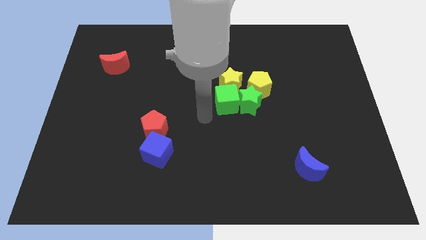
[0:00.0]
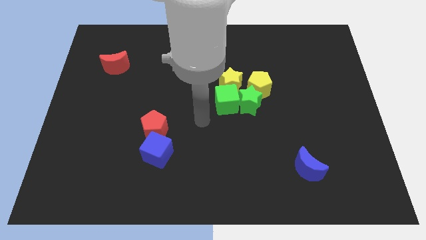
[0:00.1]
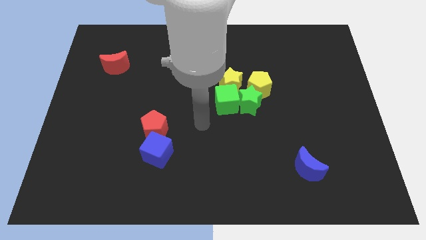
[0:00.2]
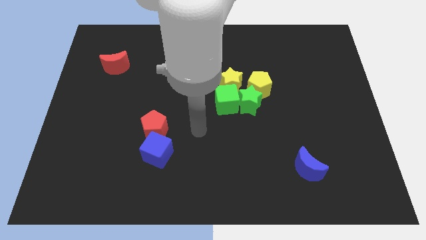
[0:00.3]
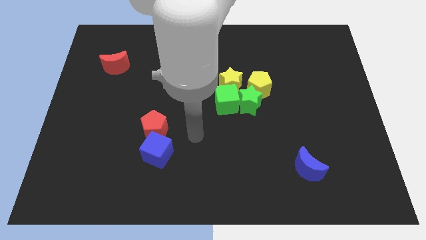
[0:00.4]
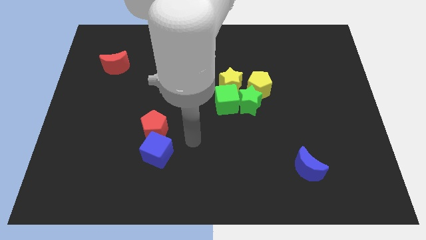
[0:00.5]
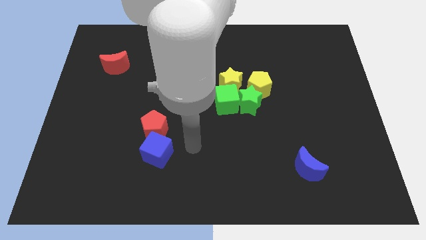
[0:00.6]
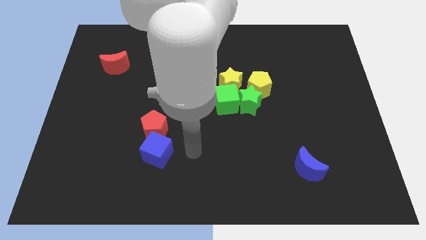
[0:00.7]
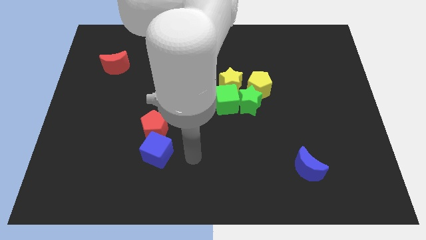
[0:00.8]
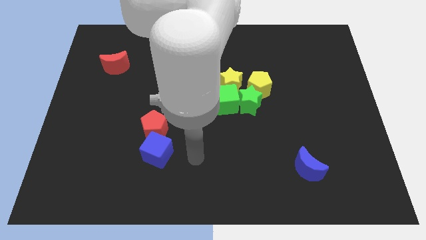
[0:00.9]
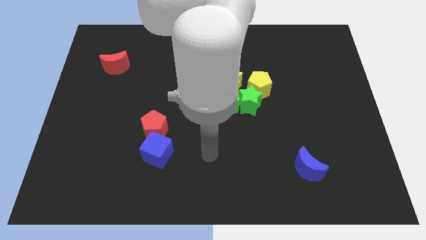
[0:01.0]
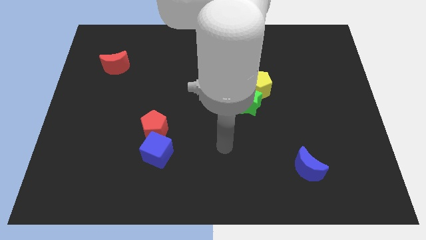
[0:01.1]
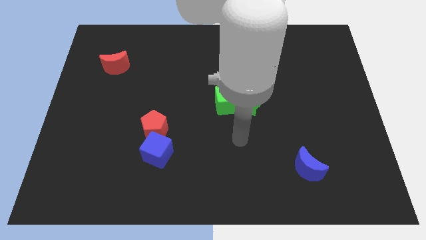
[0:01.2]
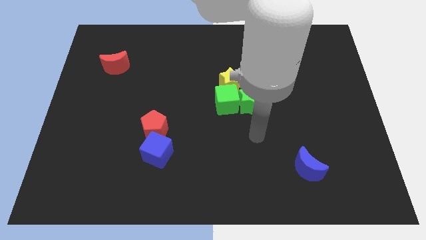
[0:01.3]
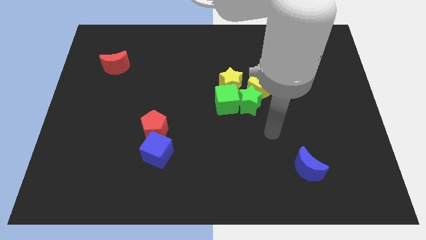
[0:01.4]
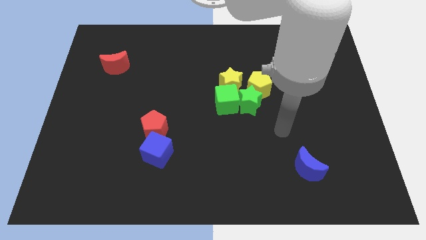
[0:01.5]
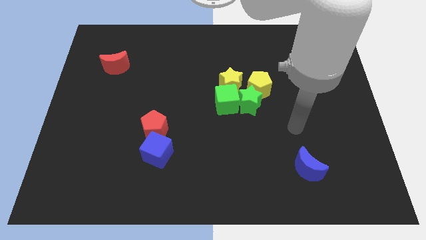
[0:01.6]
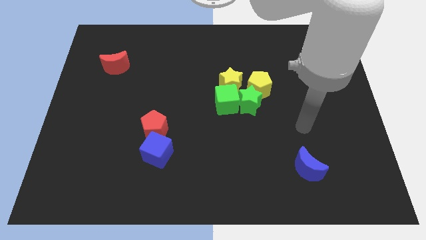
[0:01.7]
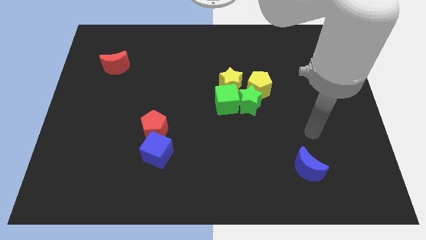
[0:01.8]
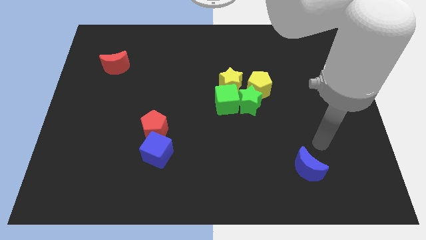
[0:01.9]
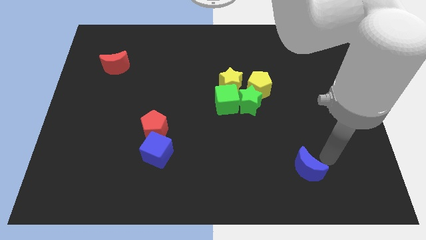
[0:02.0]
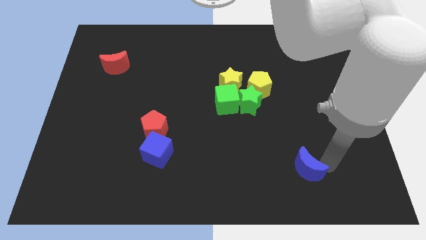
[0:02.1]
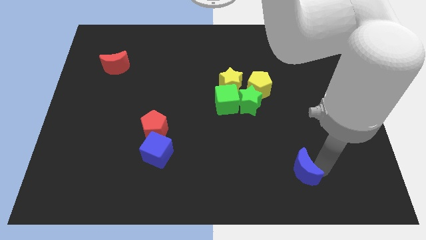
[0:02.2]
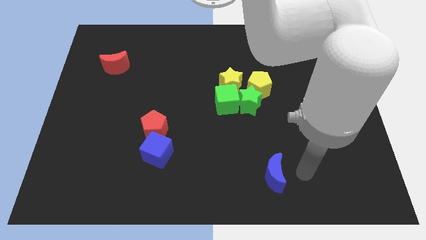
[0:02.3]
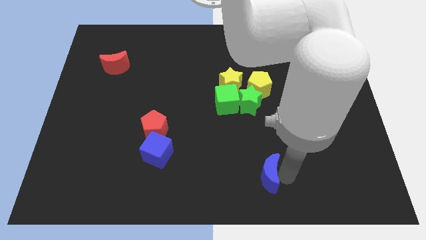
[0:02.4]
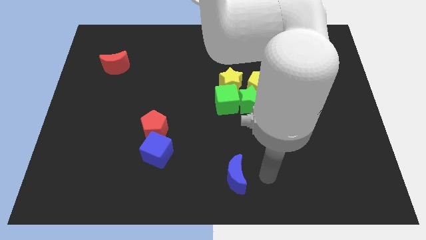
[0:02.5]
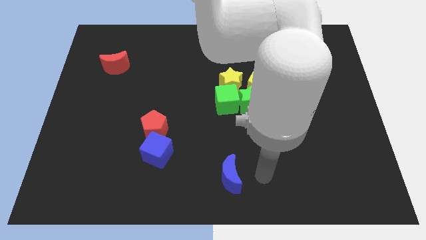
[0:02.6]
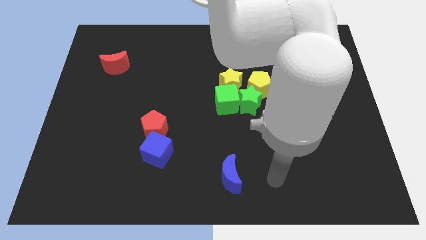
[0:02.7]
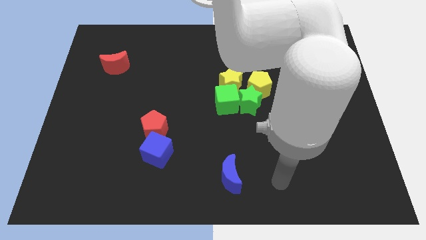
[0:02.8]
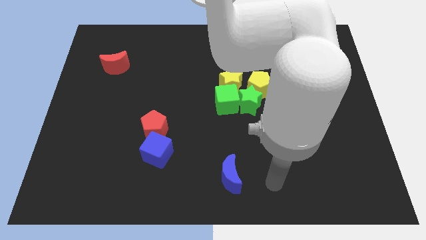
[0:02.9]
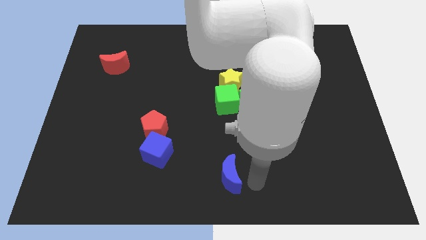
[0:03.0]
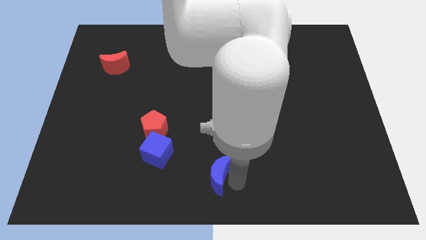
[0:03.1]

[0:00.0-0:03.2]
move the blue crescent to the bottom center of the board

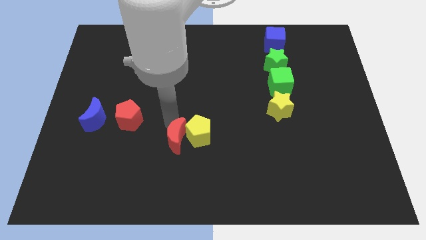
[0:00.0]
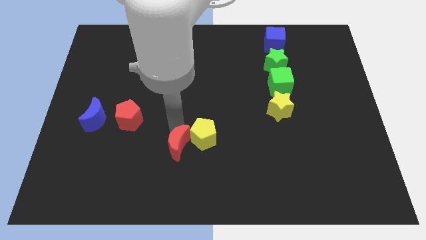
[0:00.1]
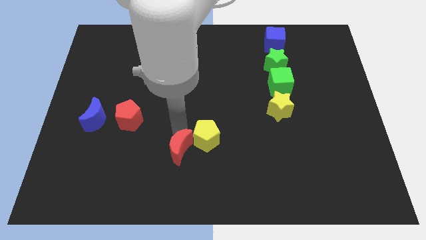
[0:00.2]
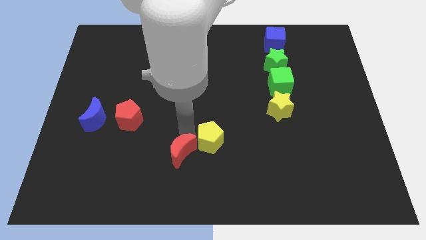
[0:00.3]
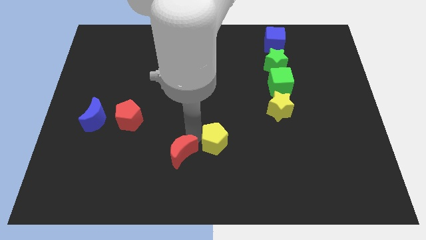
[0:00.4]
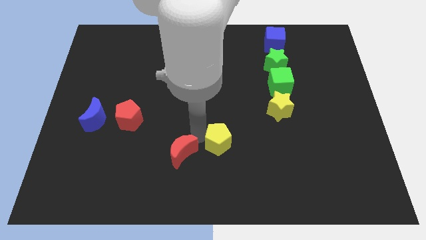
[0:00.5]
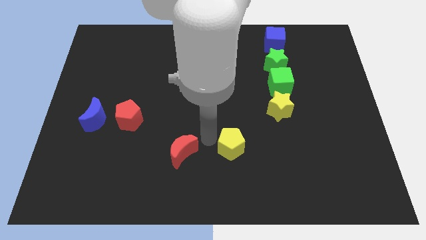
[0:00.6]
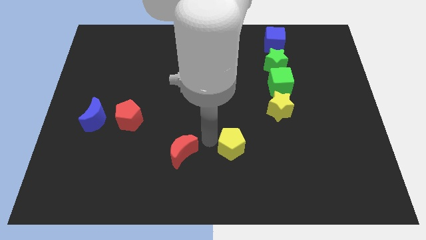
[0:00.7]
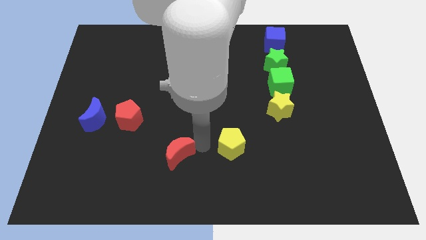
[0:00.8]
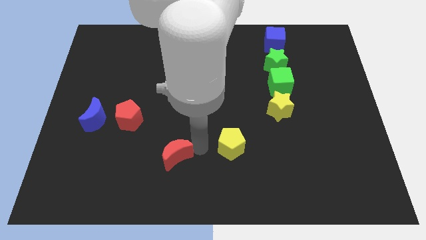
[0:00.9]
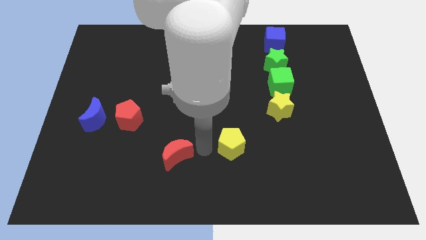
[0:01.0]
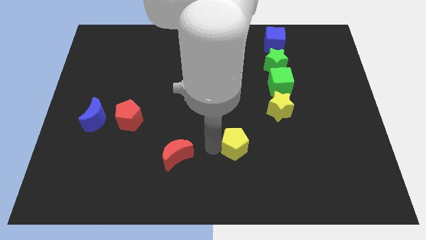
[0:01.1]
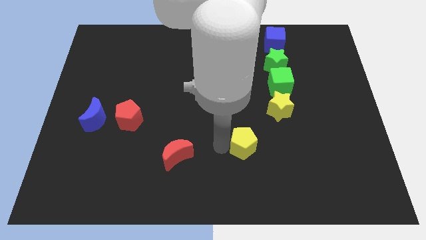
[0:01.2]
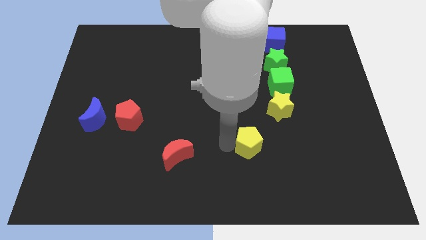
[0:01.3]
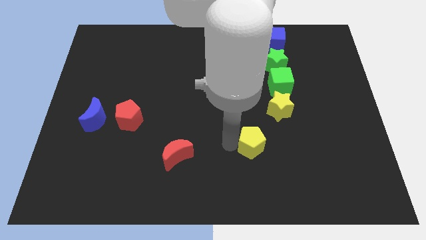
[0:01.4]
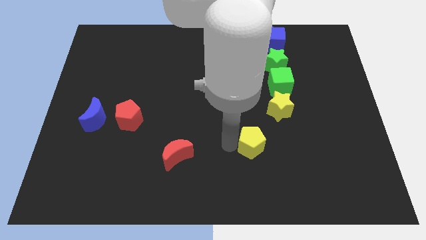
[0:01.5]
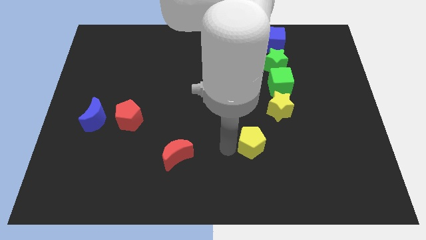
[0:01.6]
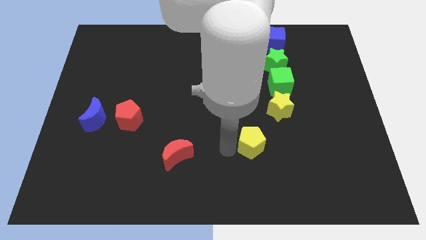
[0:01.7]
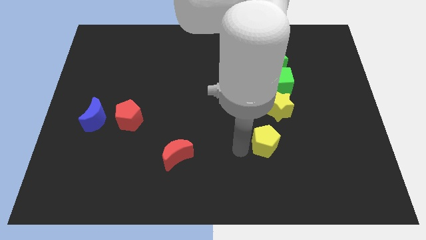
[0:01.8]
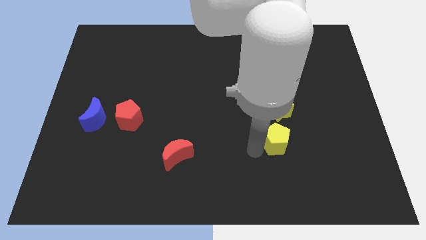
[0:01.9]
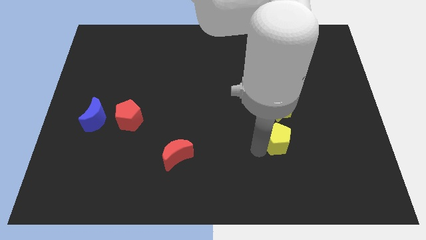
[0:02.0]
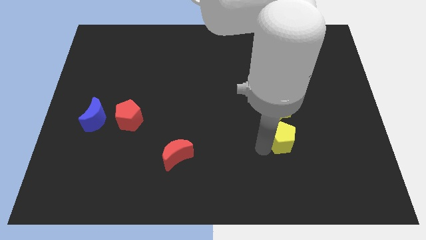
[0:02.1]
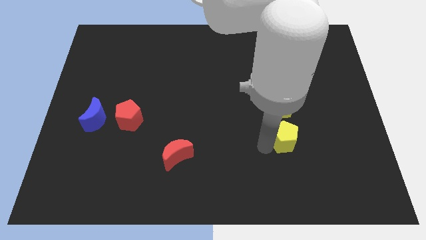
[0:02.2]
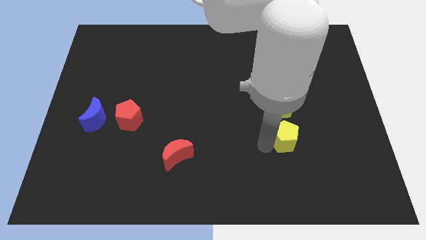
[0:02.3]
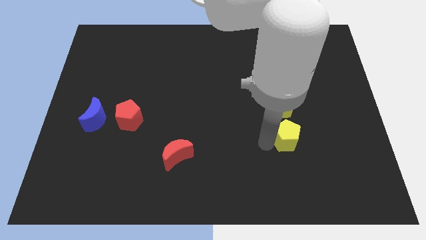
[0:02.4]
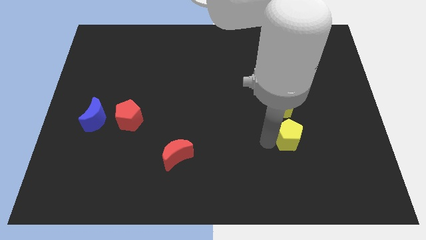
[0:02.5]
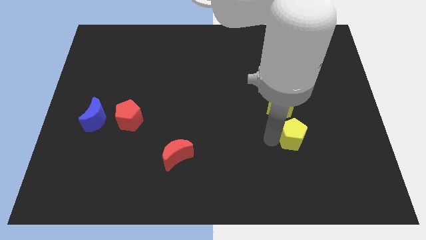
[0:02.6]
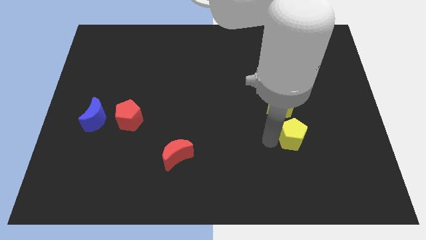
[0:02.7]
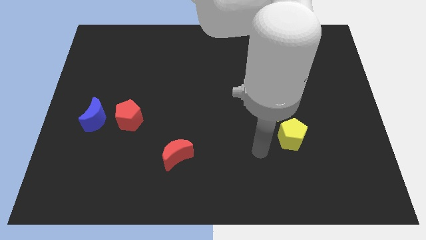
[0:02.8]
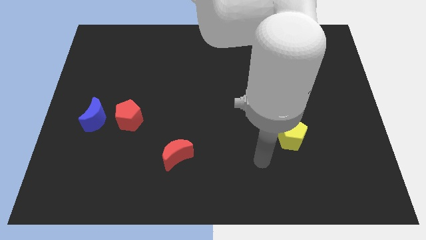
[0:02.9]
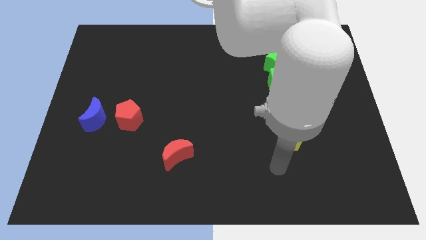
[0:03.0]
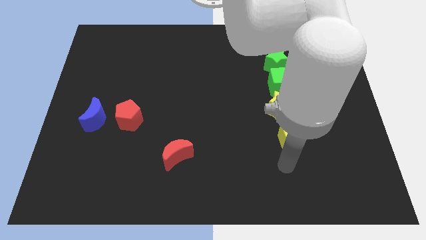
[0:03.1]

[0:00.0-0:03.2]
separate yellow pentagon from red moon

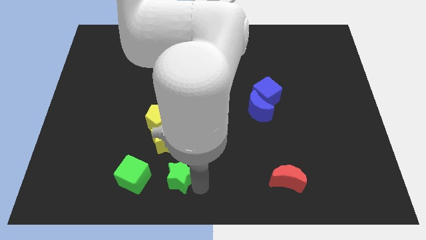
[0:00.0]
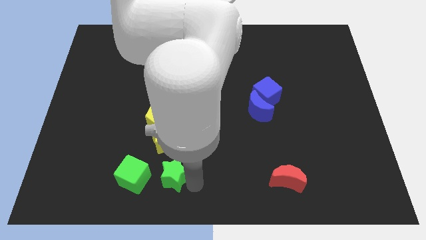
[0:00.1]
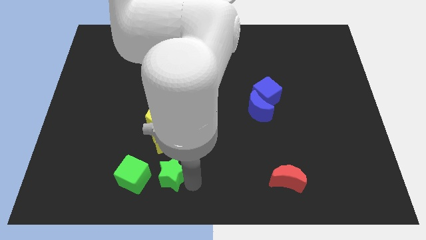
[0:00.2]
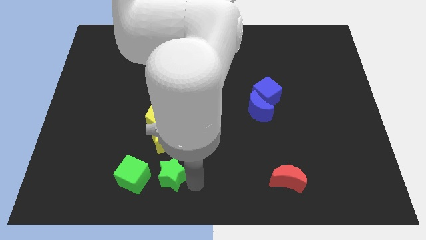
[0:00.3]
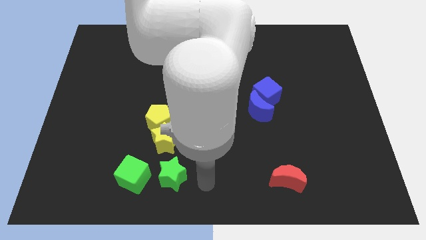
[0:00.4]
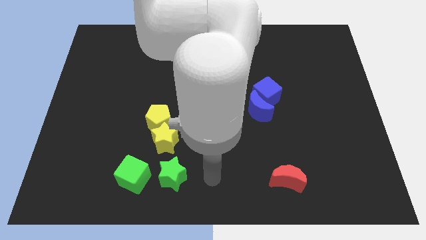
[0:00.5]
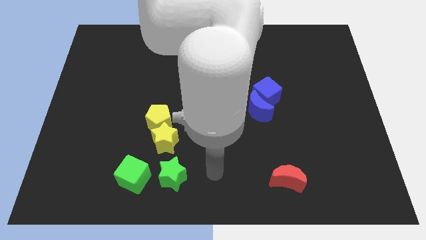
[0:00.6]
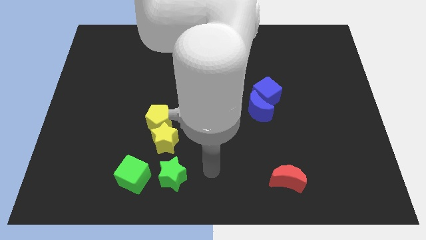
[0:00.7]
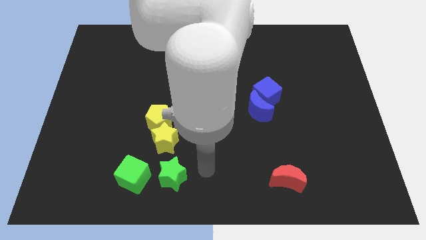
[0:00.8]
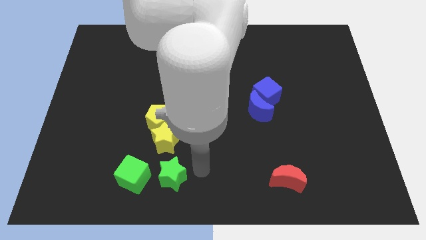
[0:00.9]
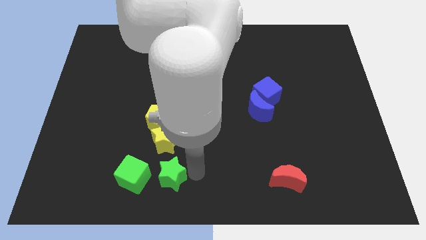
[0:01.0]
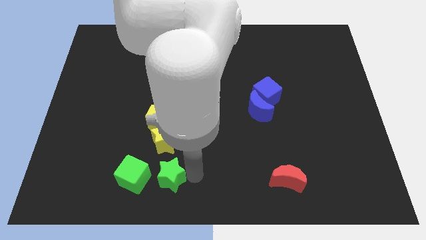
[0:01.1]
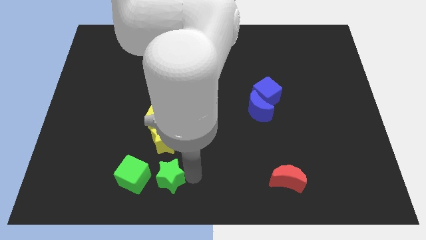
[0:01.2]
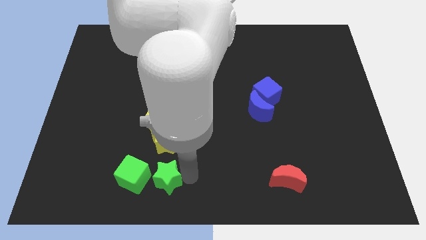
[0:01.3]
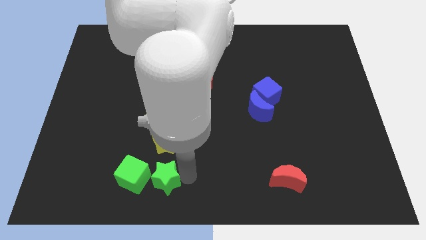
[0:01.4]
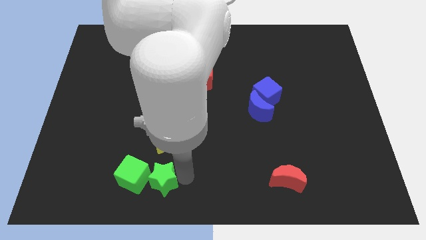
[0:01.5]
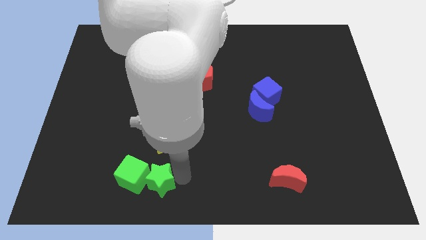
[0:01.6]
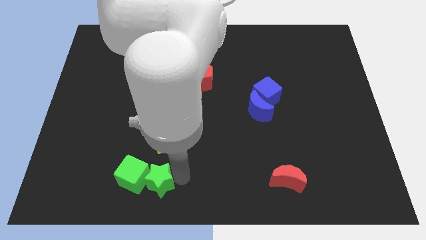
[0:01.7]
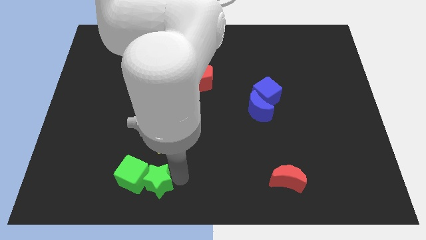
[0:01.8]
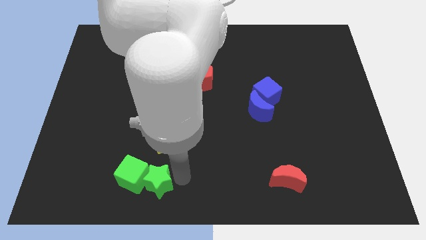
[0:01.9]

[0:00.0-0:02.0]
move the green star close to the green cube

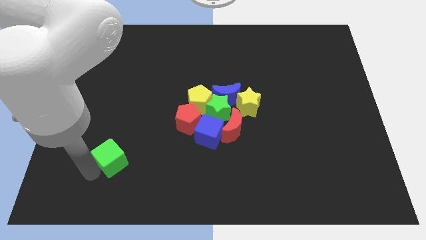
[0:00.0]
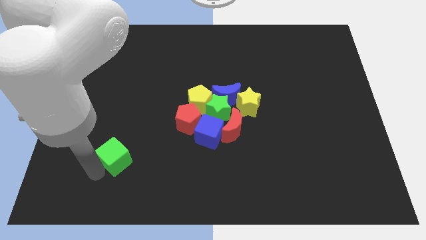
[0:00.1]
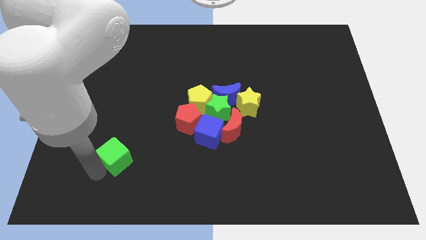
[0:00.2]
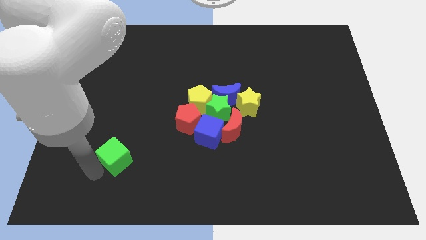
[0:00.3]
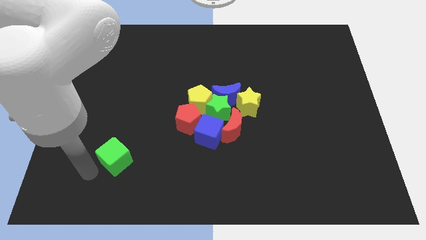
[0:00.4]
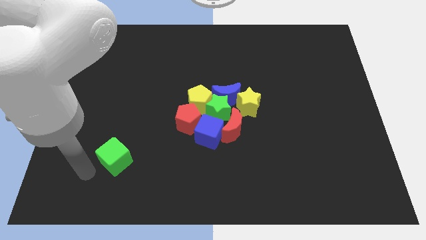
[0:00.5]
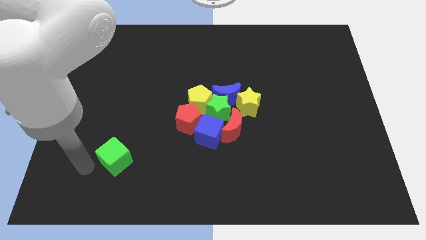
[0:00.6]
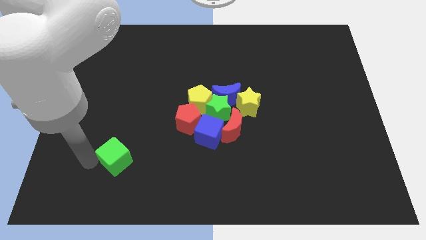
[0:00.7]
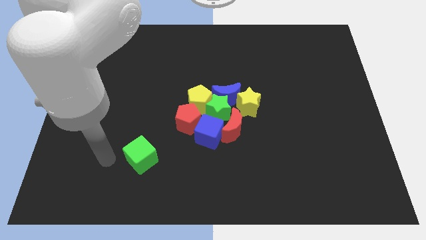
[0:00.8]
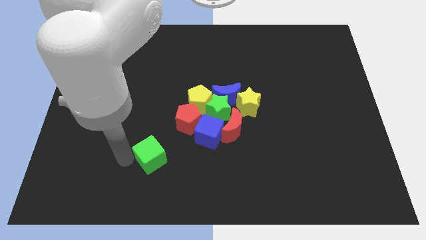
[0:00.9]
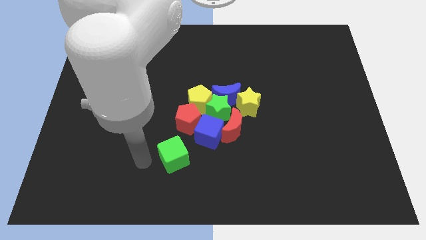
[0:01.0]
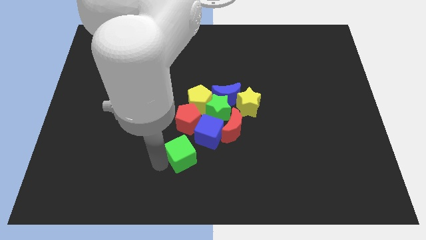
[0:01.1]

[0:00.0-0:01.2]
put the green cube vertically below the red pentagon
